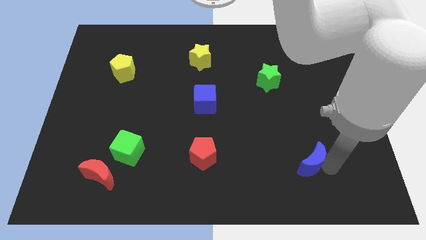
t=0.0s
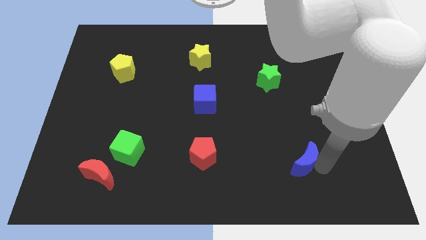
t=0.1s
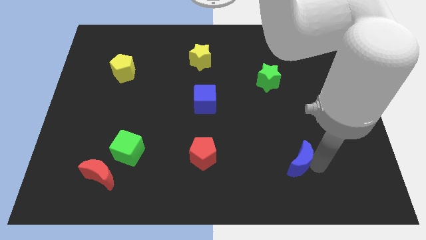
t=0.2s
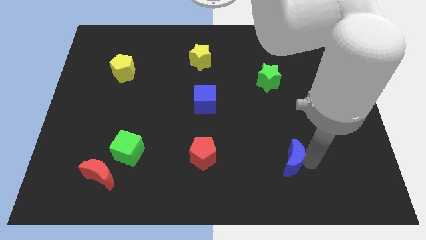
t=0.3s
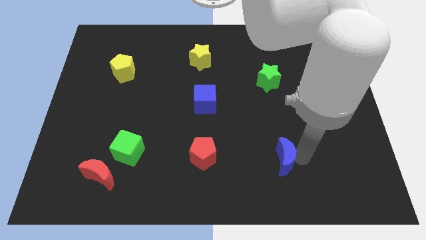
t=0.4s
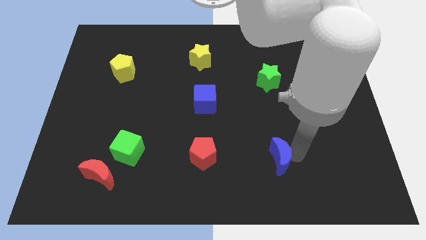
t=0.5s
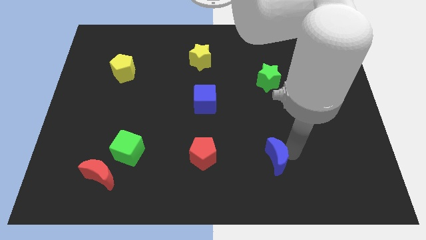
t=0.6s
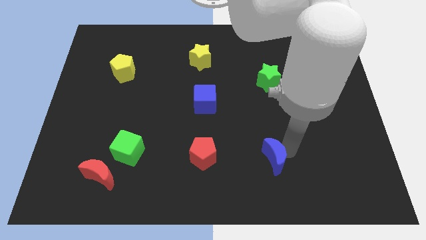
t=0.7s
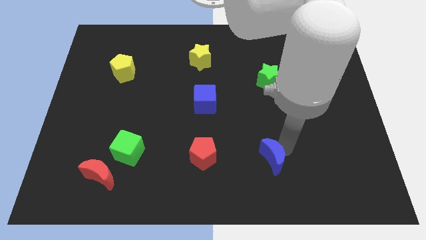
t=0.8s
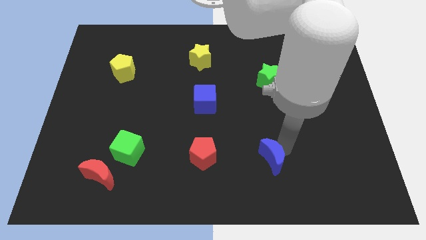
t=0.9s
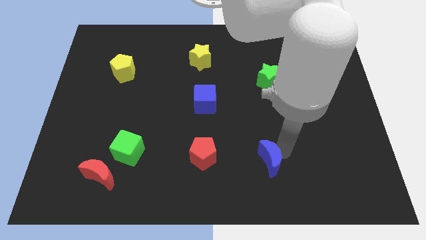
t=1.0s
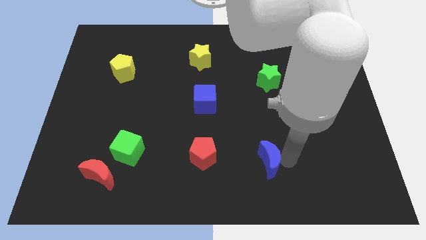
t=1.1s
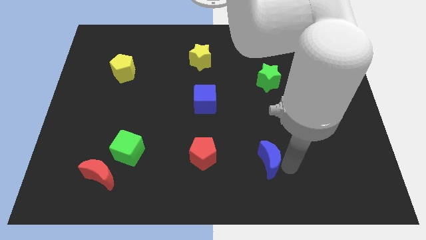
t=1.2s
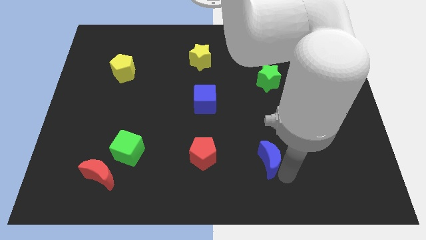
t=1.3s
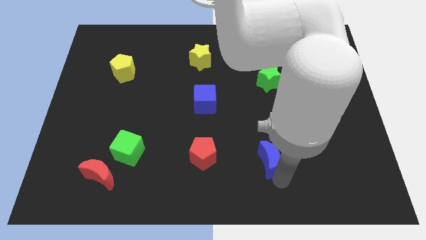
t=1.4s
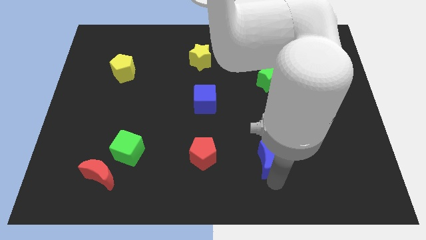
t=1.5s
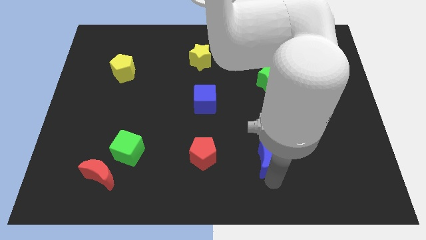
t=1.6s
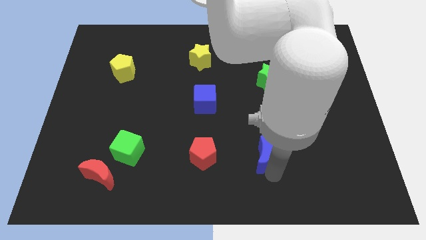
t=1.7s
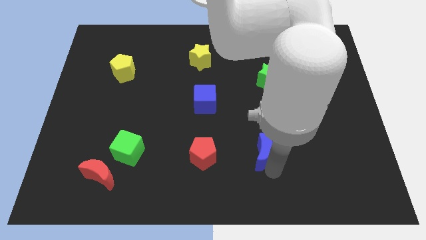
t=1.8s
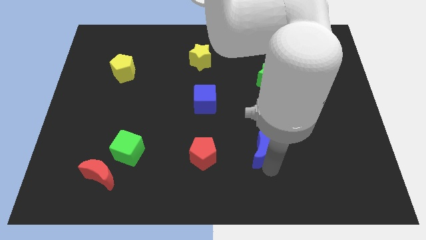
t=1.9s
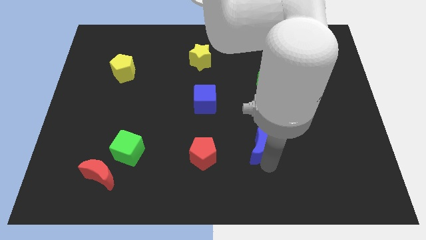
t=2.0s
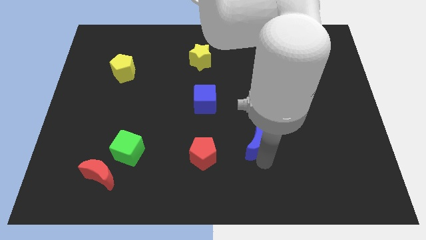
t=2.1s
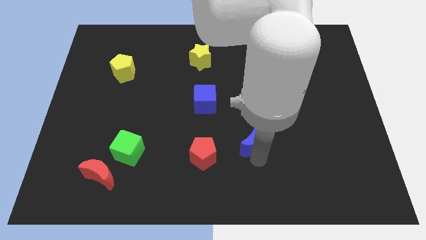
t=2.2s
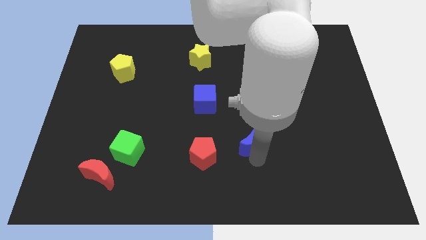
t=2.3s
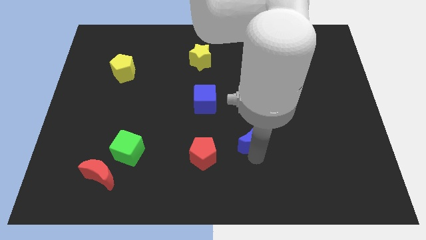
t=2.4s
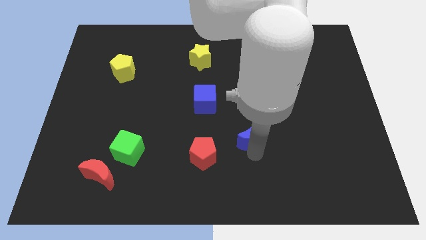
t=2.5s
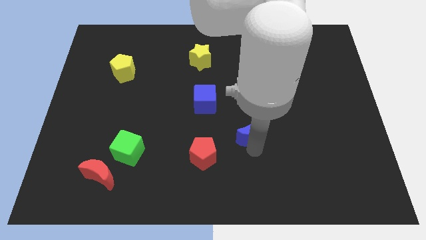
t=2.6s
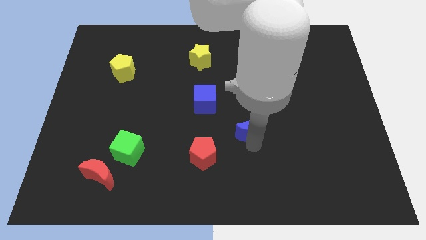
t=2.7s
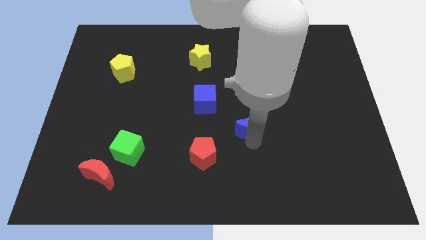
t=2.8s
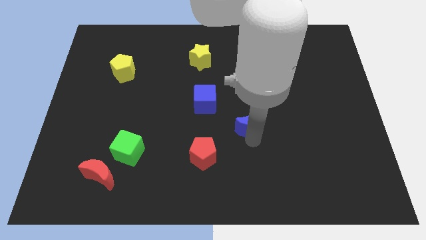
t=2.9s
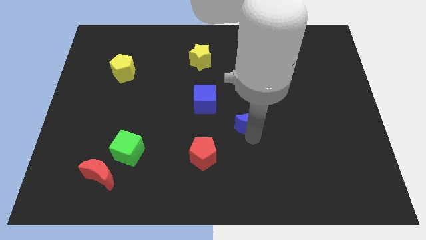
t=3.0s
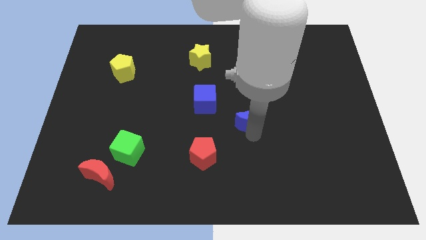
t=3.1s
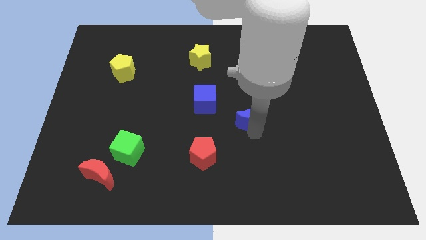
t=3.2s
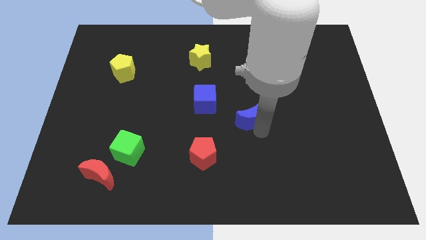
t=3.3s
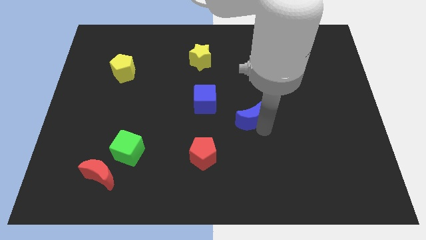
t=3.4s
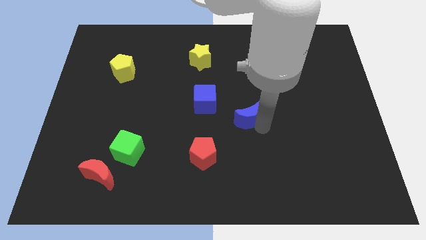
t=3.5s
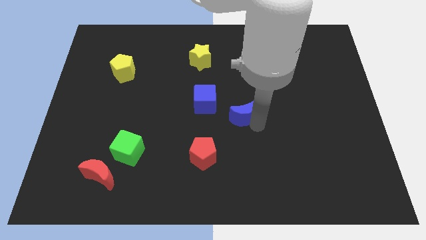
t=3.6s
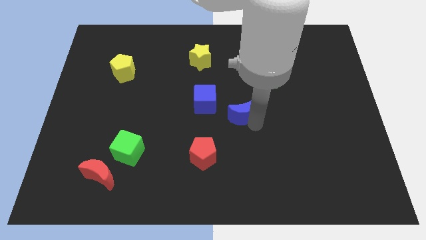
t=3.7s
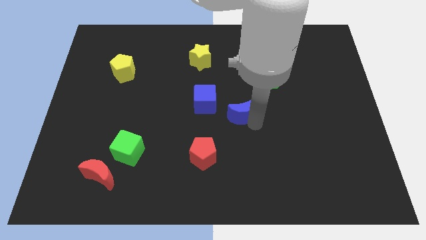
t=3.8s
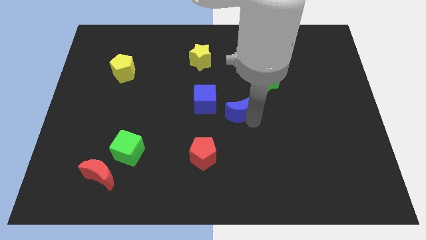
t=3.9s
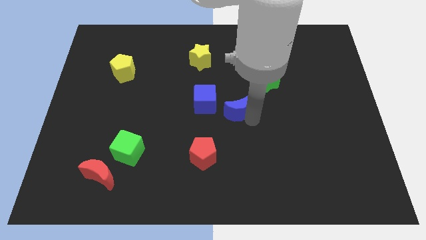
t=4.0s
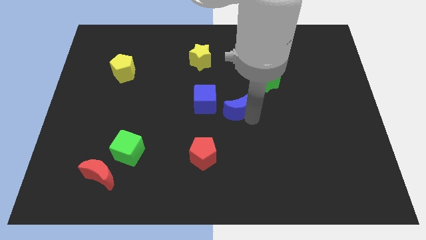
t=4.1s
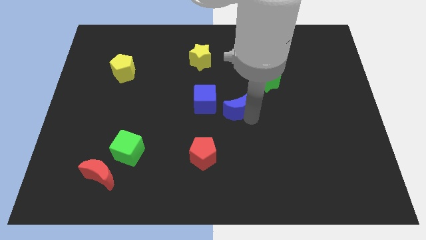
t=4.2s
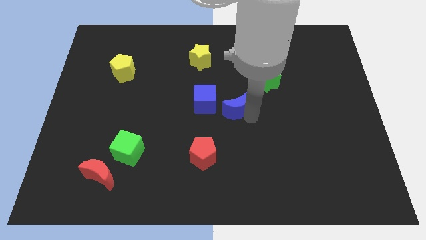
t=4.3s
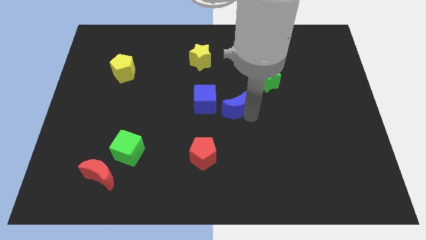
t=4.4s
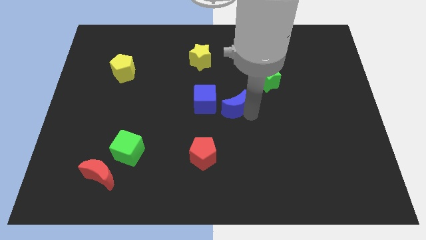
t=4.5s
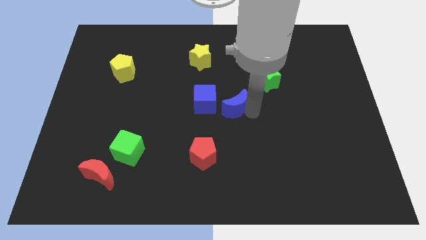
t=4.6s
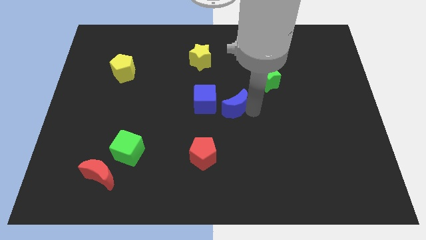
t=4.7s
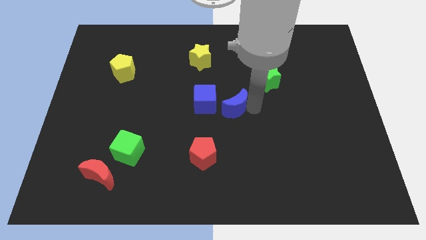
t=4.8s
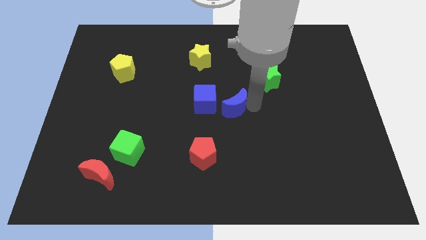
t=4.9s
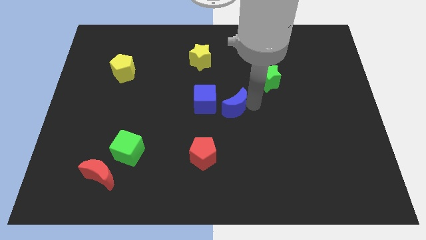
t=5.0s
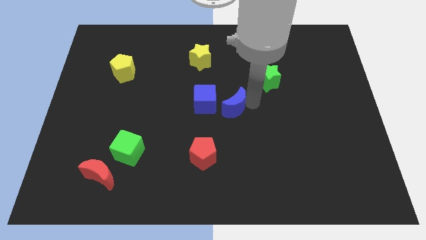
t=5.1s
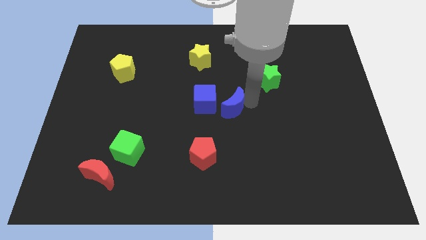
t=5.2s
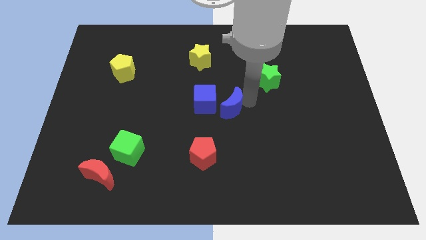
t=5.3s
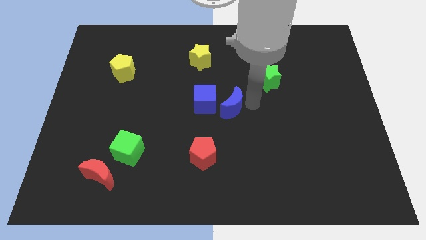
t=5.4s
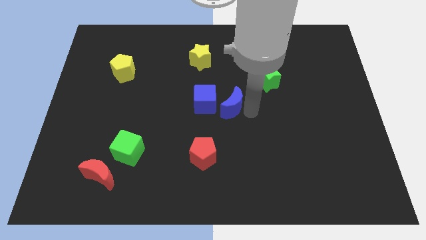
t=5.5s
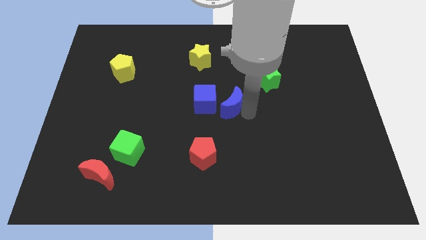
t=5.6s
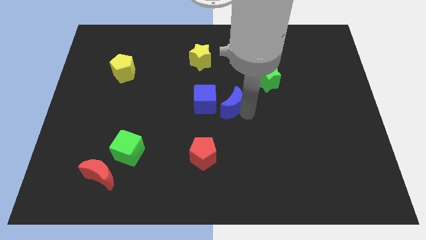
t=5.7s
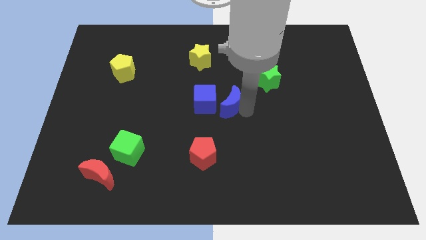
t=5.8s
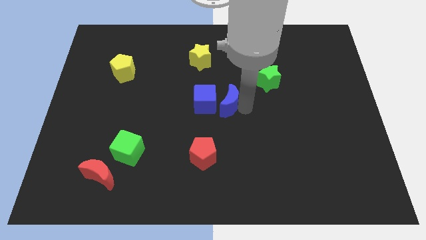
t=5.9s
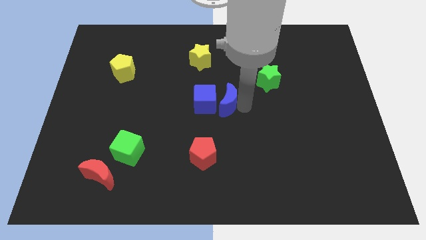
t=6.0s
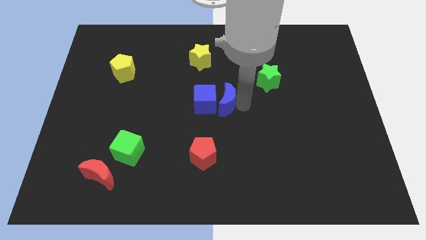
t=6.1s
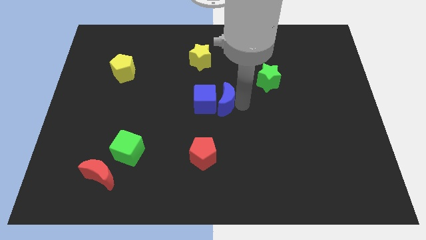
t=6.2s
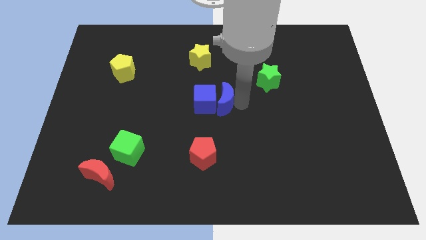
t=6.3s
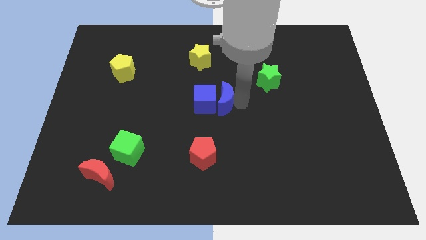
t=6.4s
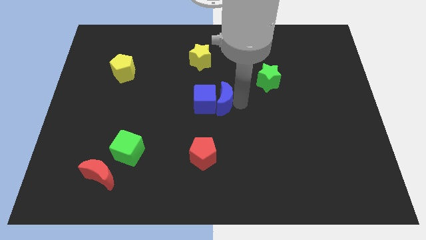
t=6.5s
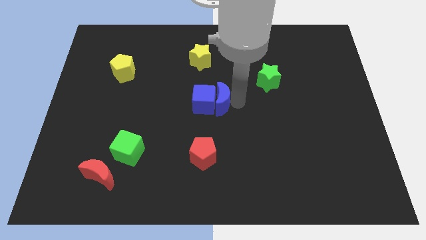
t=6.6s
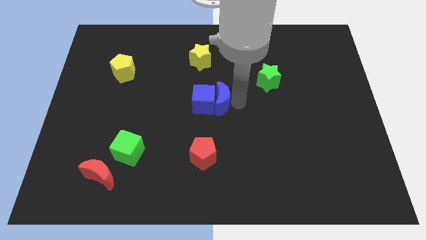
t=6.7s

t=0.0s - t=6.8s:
move the blue crescent to the center on the board

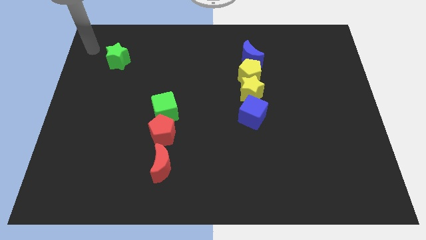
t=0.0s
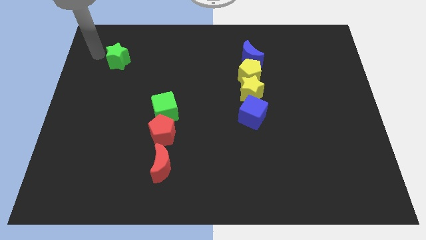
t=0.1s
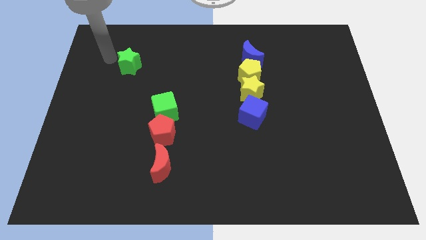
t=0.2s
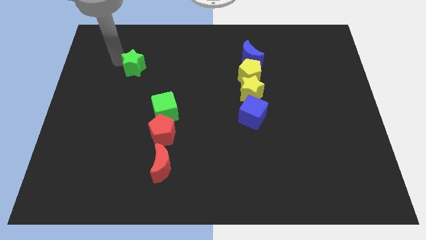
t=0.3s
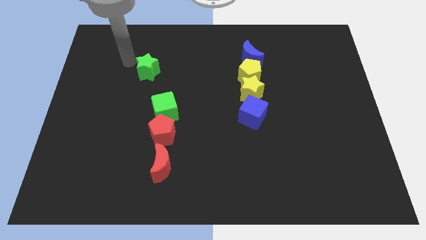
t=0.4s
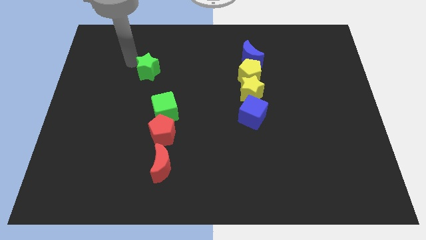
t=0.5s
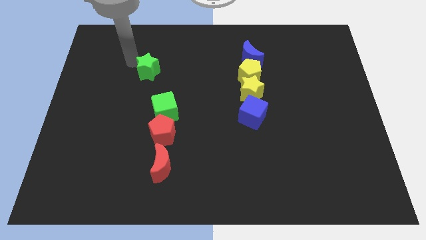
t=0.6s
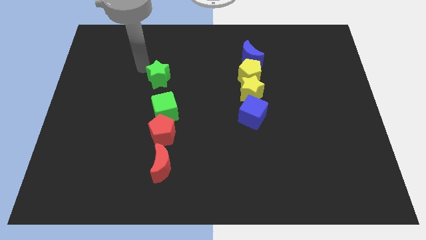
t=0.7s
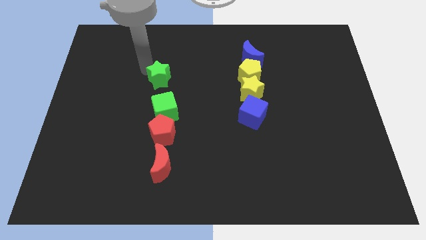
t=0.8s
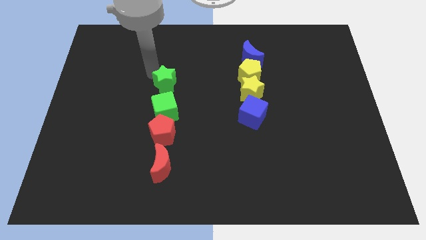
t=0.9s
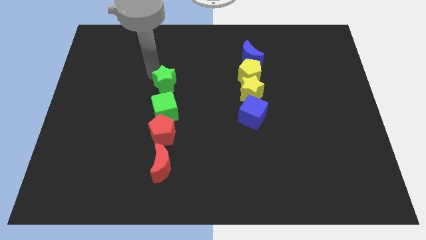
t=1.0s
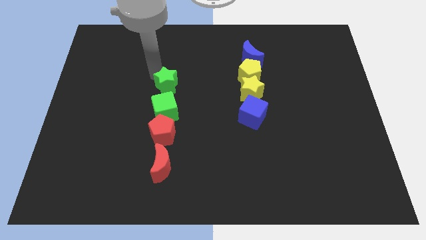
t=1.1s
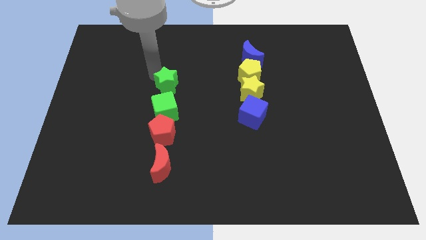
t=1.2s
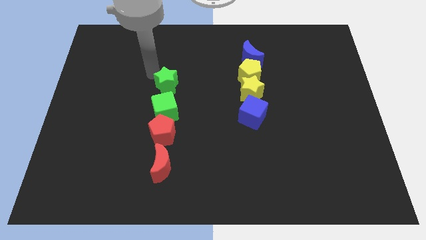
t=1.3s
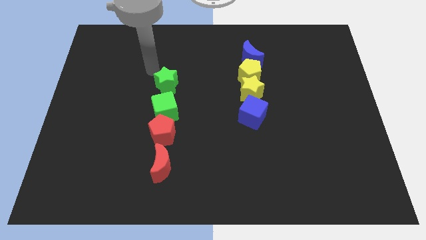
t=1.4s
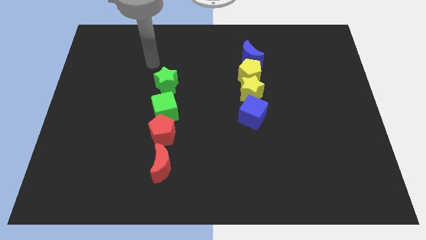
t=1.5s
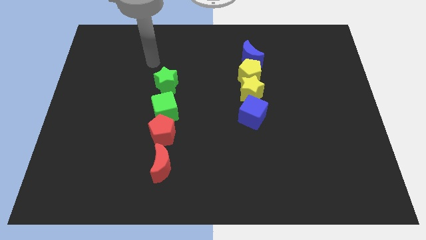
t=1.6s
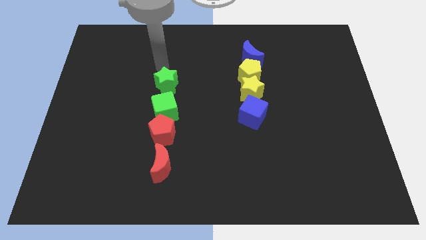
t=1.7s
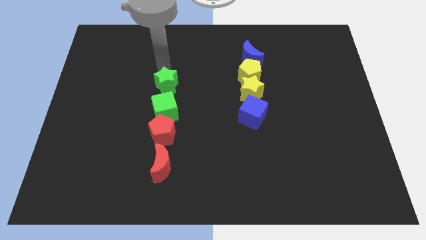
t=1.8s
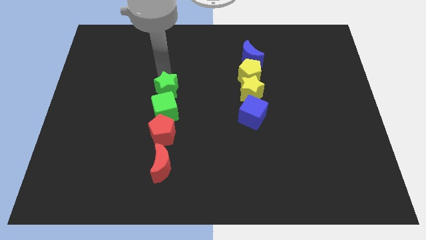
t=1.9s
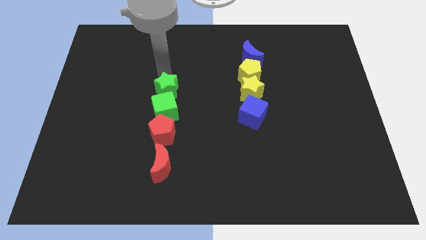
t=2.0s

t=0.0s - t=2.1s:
slightly adjust the green star to the top of green cube
